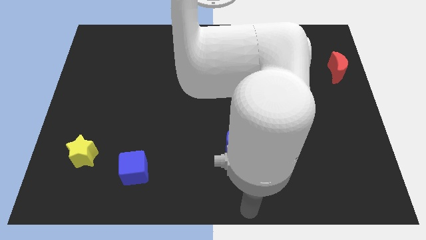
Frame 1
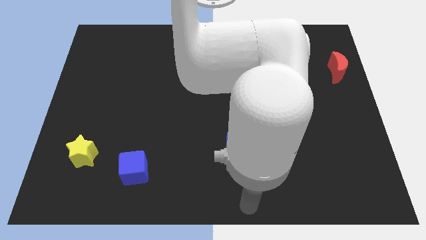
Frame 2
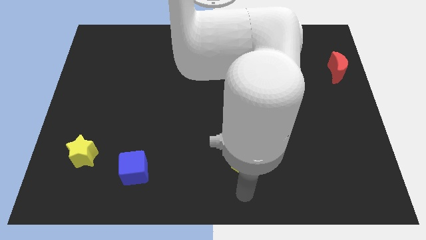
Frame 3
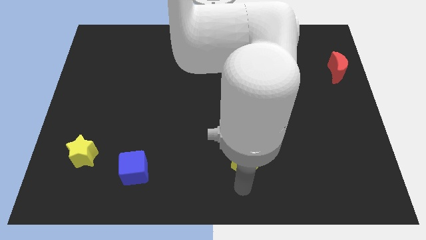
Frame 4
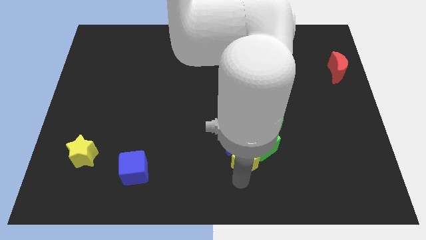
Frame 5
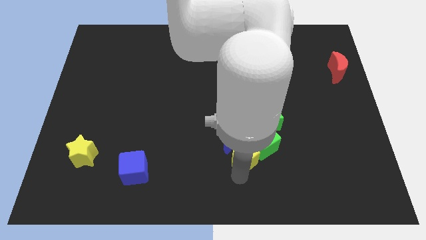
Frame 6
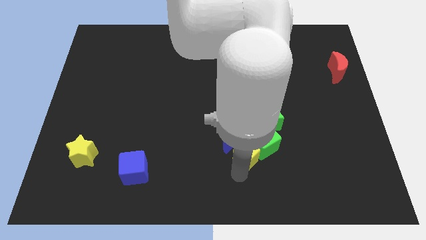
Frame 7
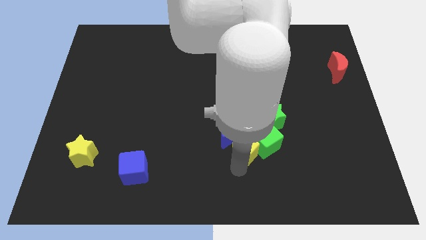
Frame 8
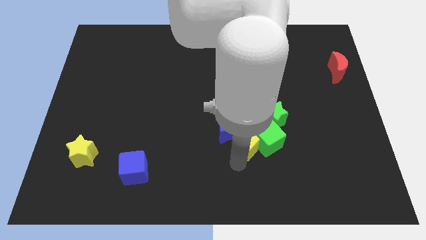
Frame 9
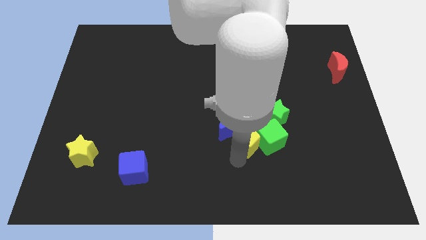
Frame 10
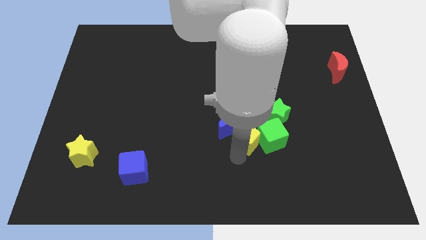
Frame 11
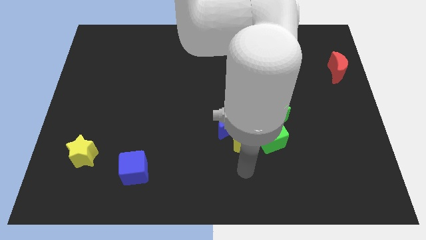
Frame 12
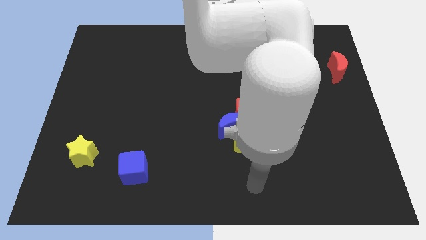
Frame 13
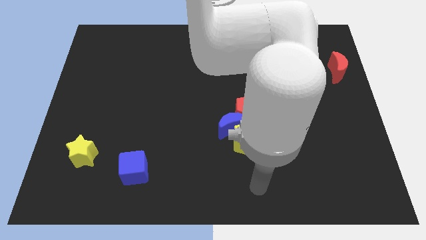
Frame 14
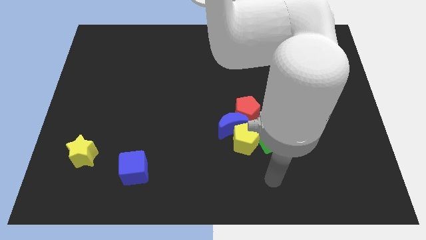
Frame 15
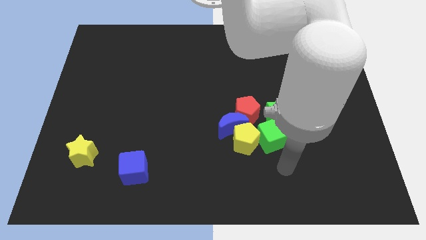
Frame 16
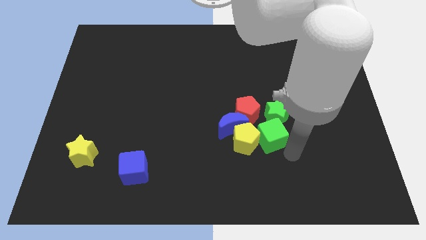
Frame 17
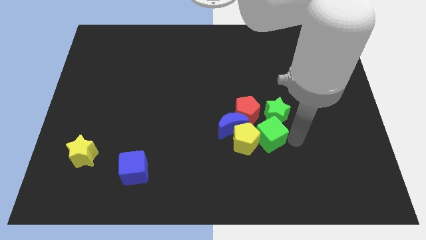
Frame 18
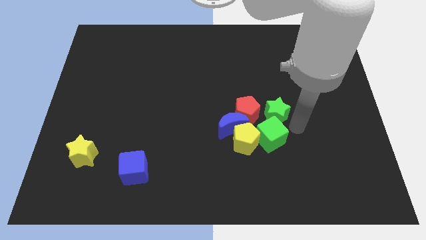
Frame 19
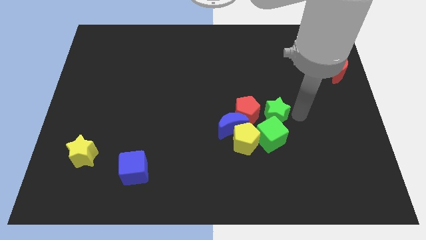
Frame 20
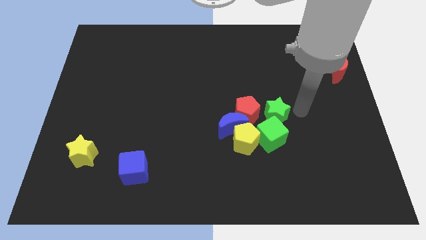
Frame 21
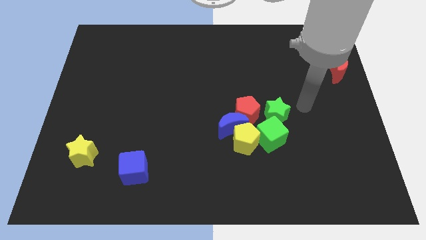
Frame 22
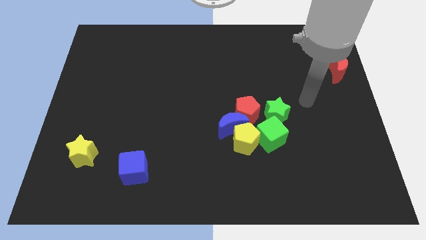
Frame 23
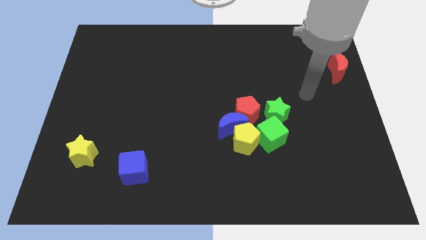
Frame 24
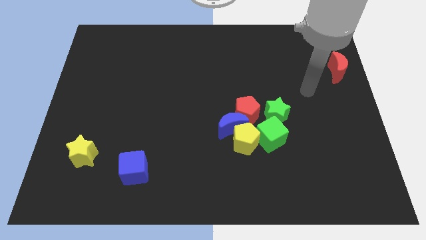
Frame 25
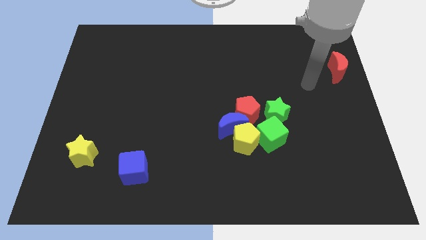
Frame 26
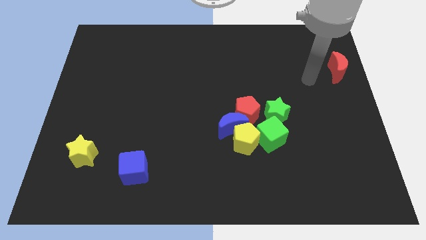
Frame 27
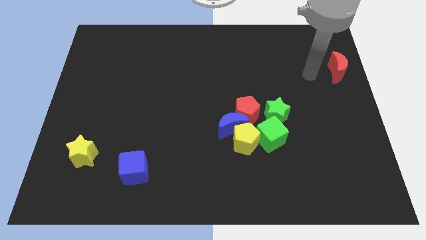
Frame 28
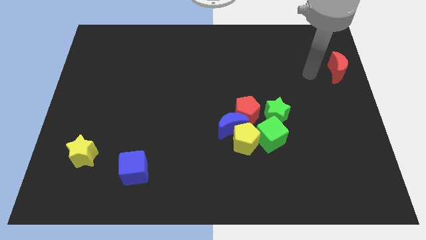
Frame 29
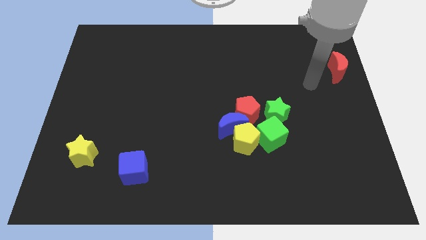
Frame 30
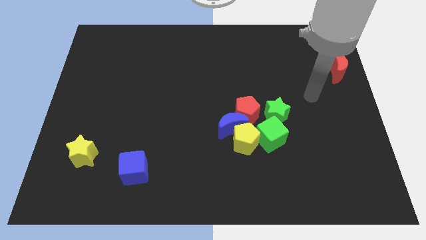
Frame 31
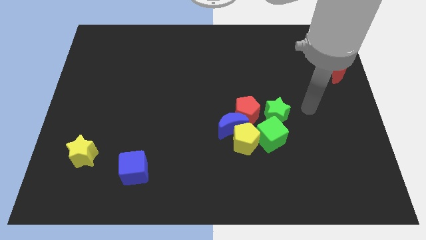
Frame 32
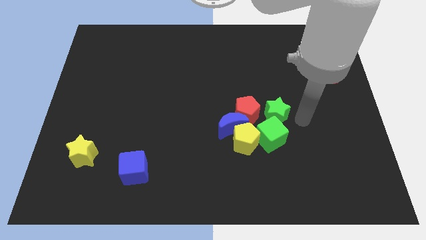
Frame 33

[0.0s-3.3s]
place your arm right to the green star

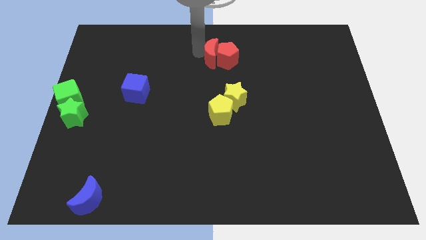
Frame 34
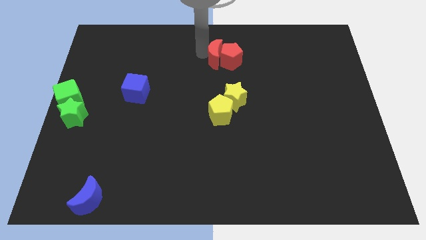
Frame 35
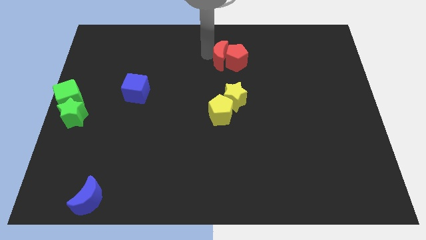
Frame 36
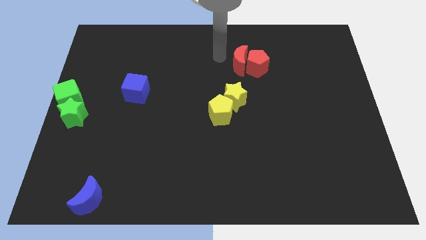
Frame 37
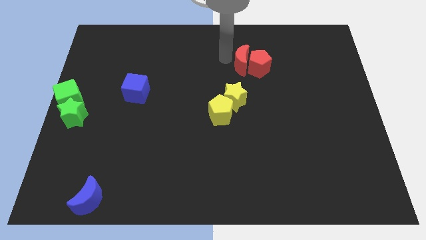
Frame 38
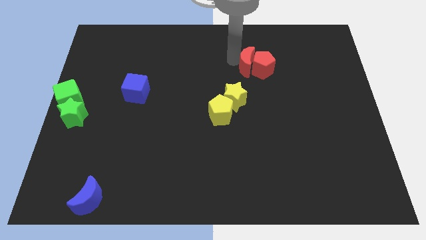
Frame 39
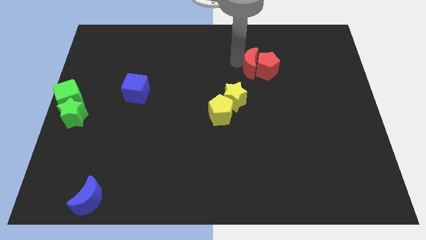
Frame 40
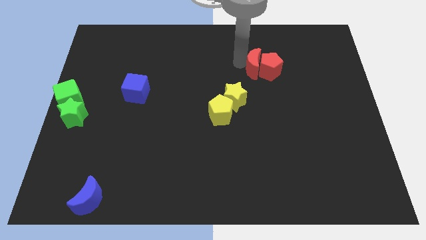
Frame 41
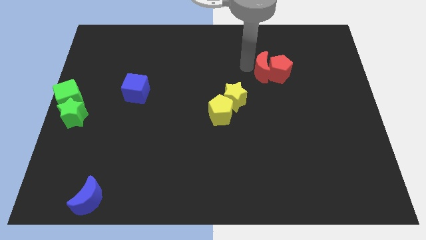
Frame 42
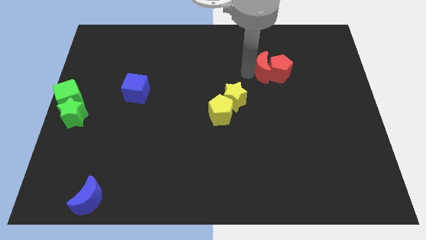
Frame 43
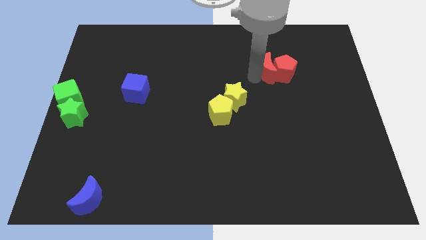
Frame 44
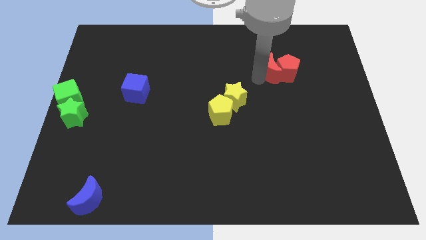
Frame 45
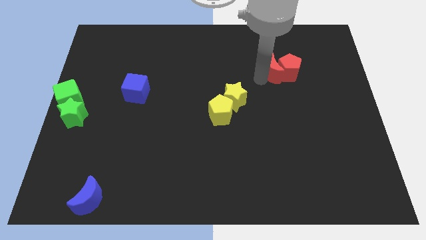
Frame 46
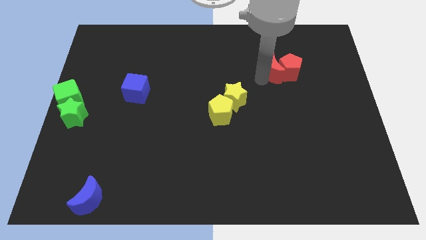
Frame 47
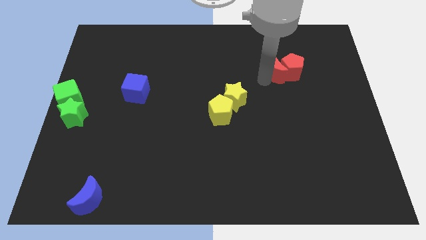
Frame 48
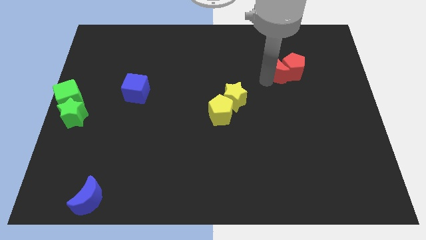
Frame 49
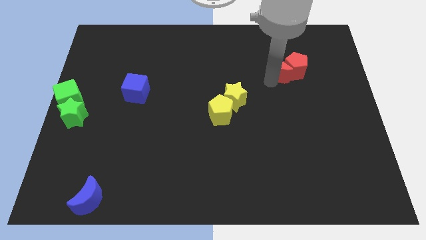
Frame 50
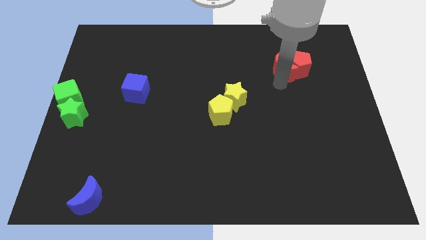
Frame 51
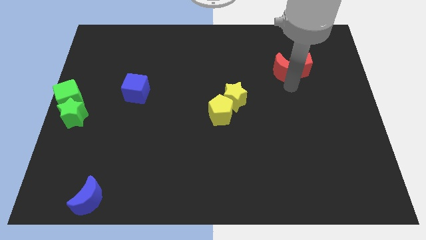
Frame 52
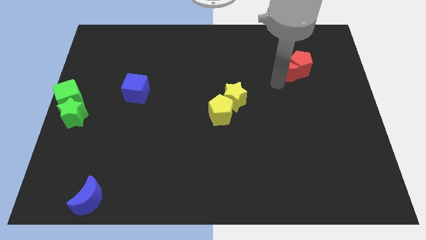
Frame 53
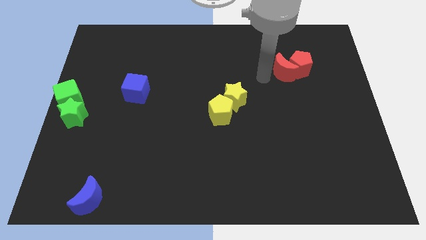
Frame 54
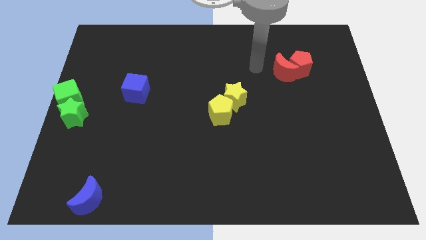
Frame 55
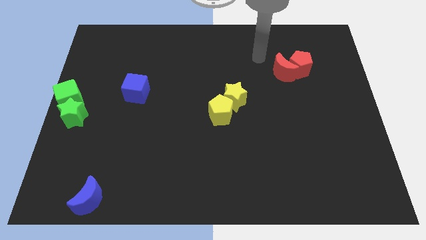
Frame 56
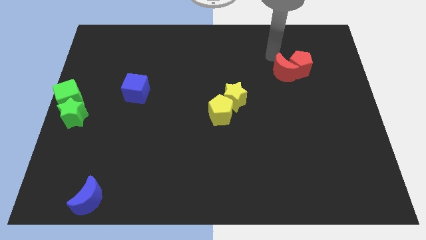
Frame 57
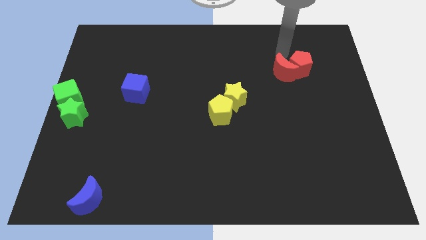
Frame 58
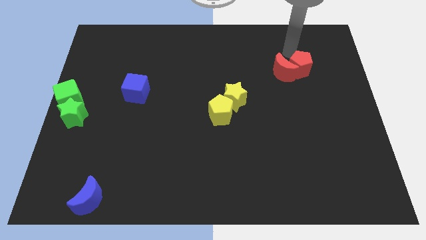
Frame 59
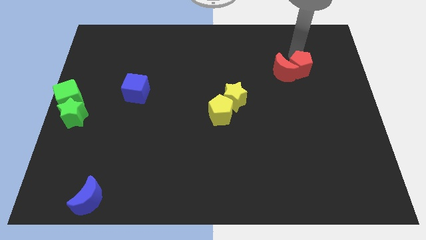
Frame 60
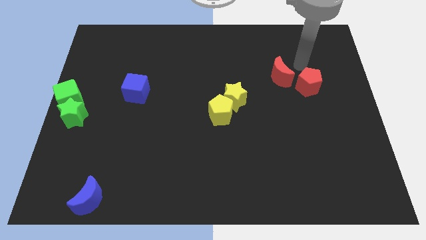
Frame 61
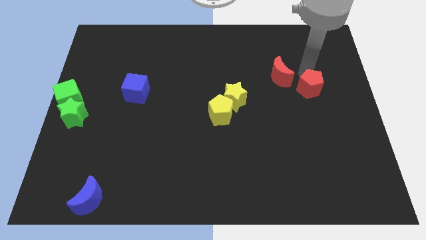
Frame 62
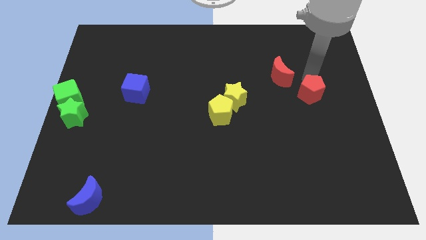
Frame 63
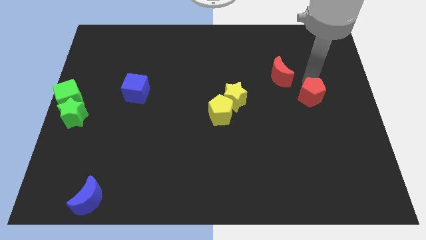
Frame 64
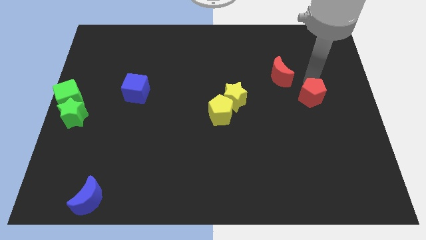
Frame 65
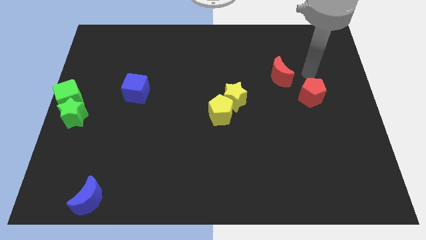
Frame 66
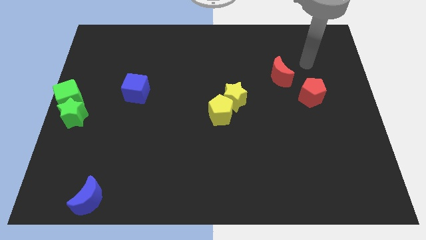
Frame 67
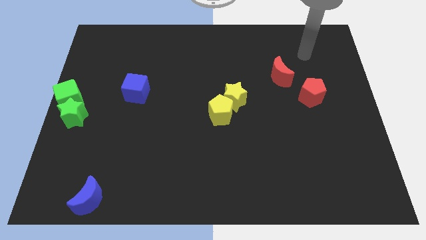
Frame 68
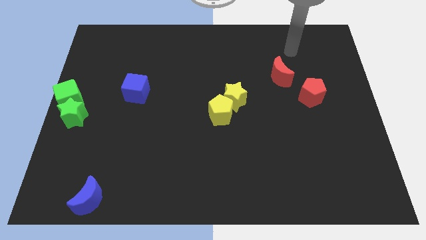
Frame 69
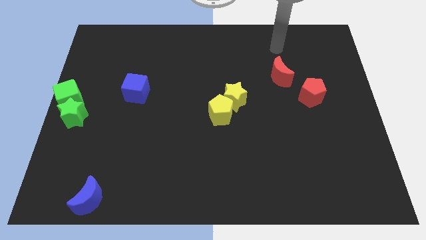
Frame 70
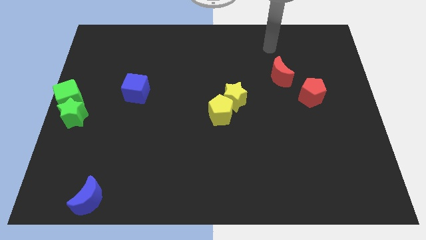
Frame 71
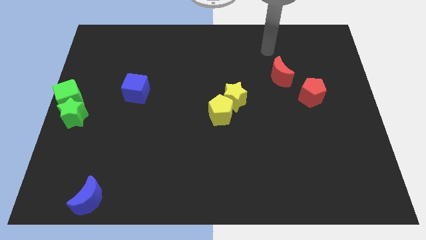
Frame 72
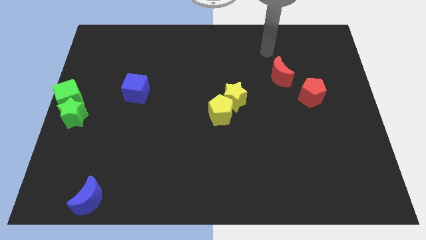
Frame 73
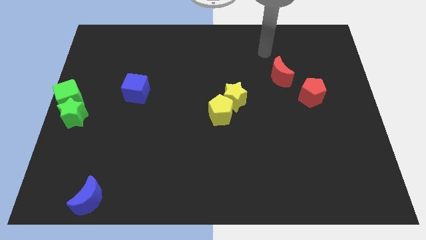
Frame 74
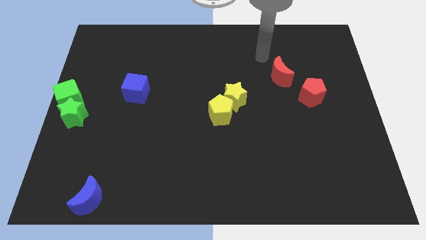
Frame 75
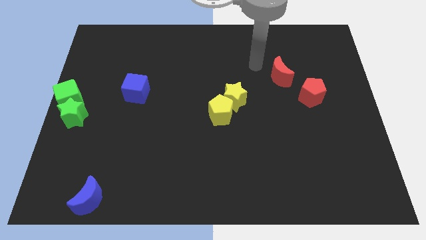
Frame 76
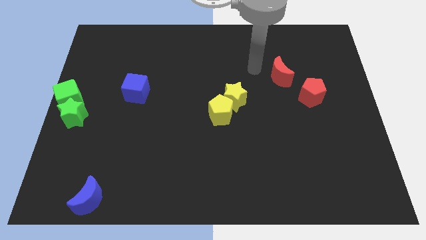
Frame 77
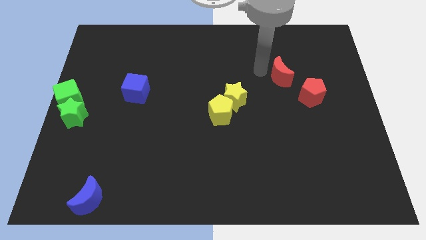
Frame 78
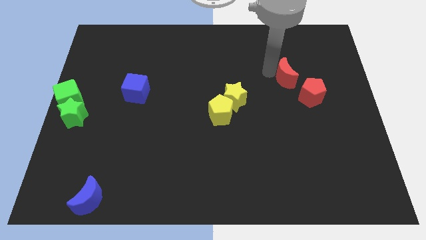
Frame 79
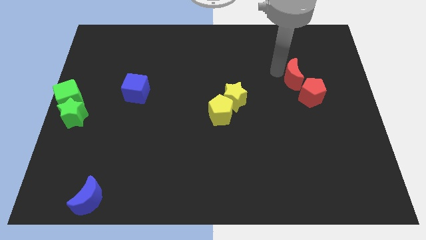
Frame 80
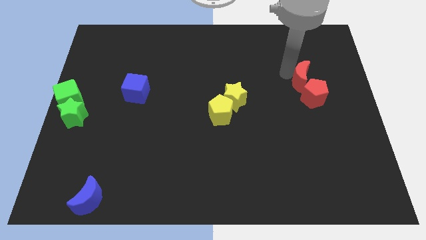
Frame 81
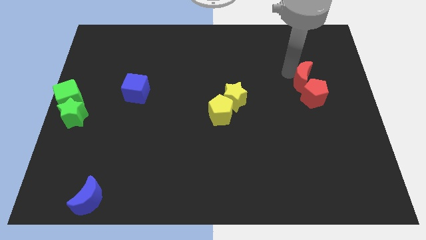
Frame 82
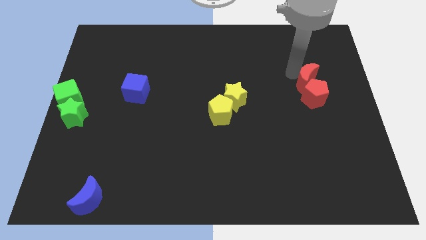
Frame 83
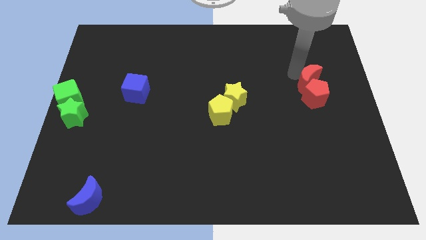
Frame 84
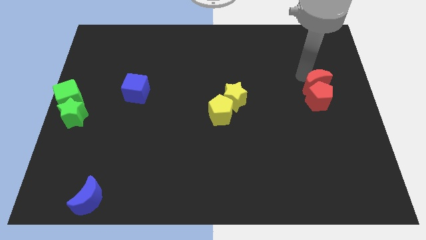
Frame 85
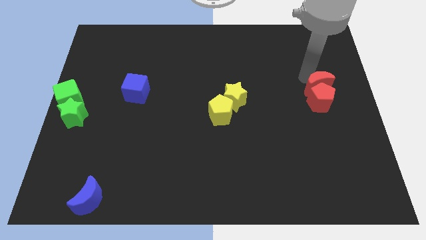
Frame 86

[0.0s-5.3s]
move the red blocks slightly down

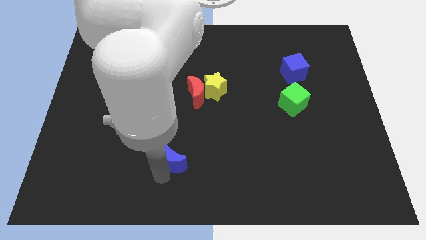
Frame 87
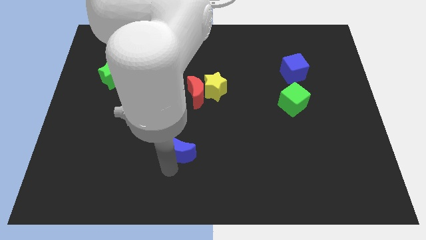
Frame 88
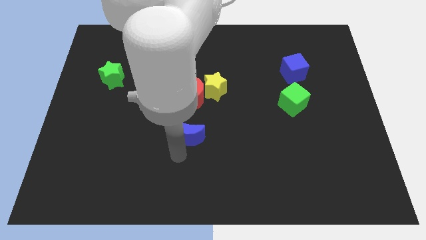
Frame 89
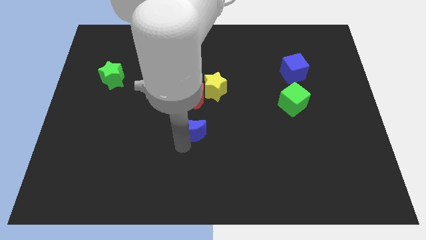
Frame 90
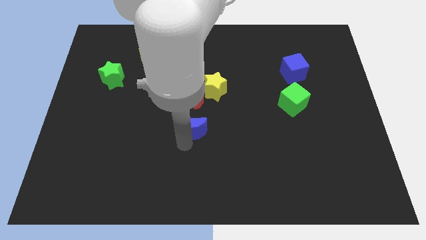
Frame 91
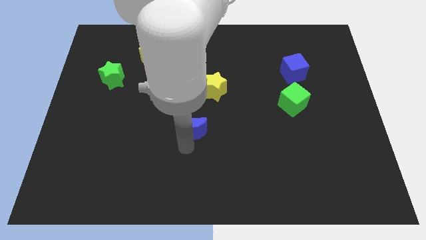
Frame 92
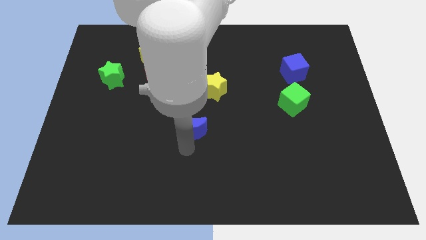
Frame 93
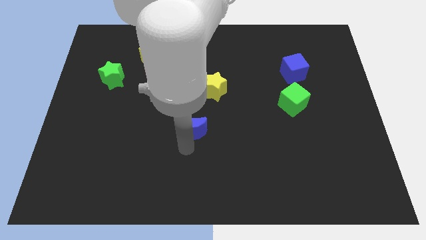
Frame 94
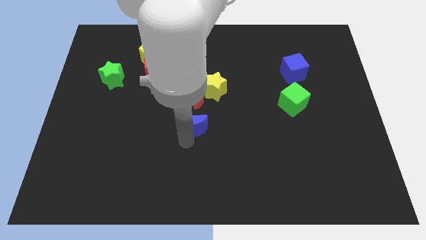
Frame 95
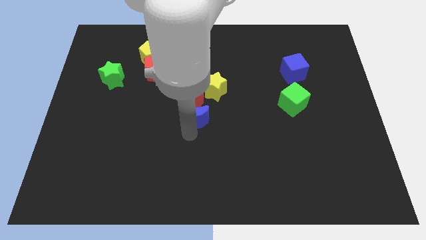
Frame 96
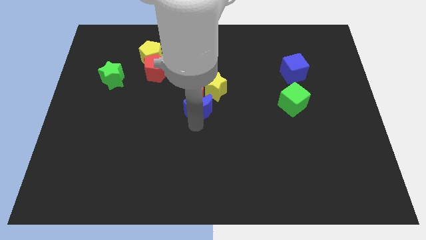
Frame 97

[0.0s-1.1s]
place the blue moon below the red moon
